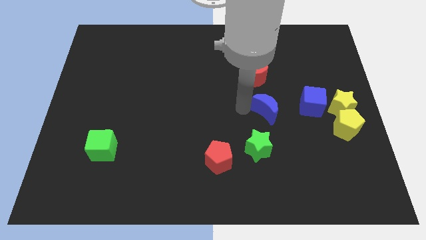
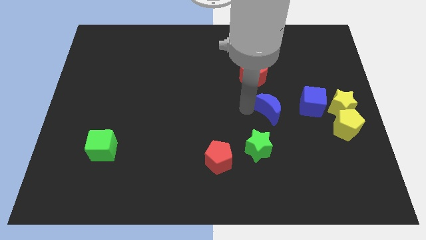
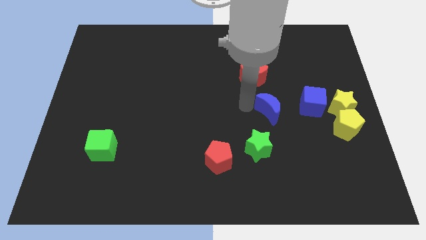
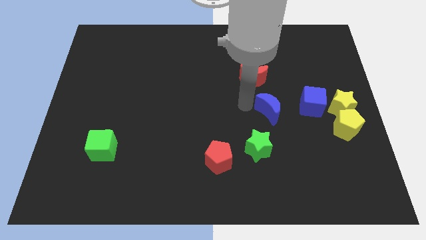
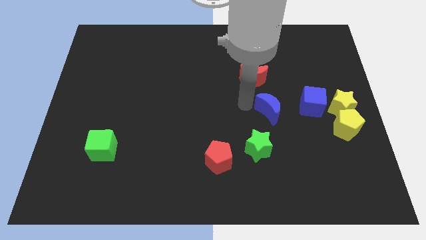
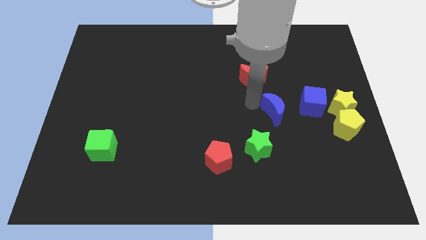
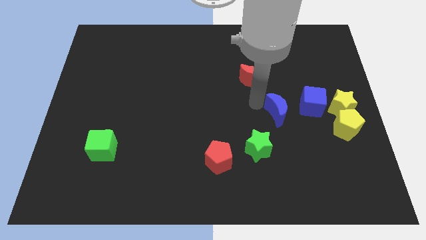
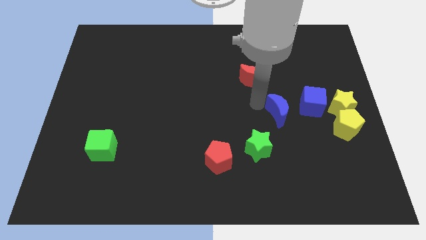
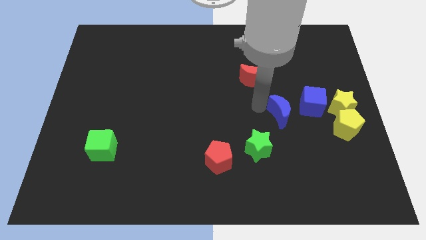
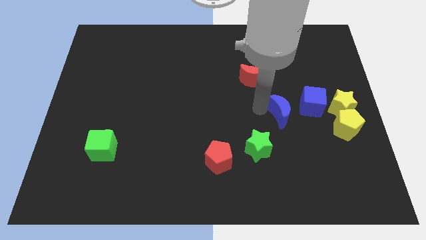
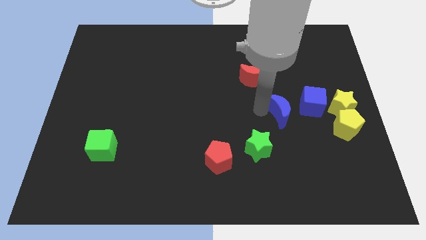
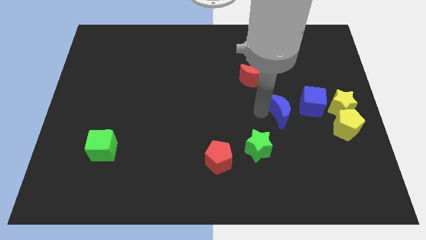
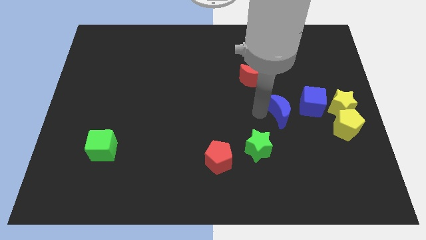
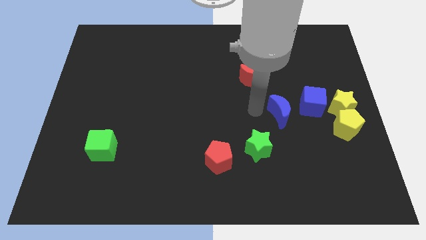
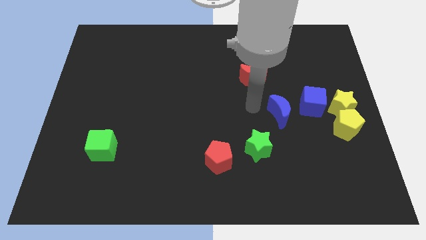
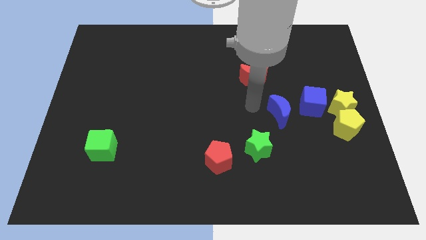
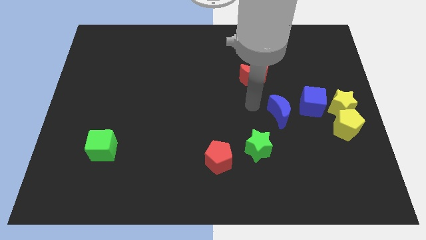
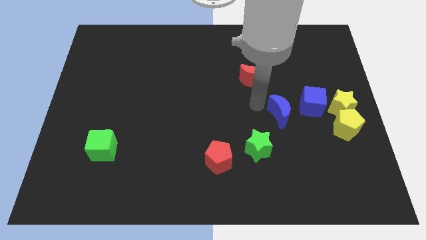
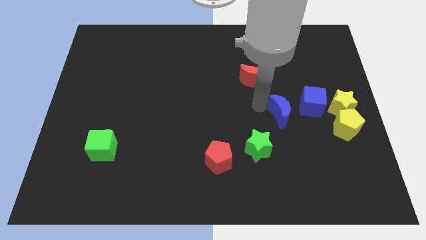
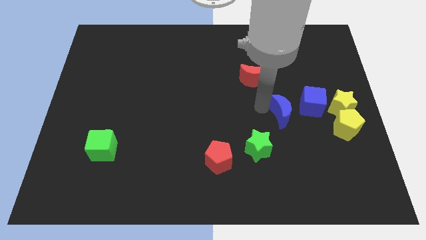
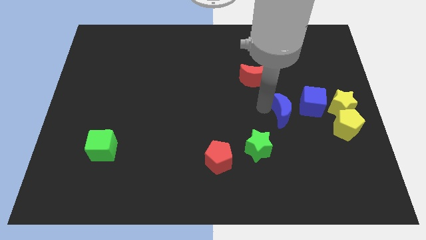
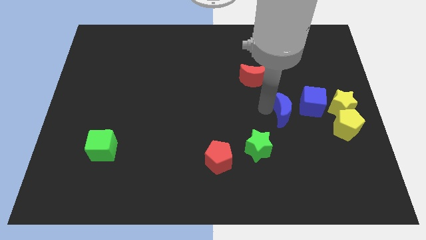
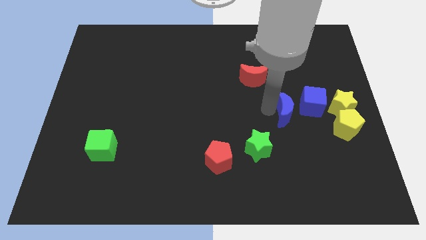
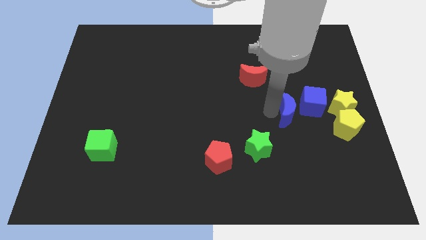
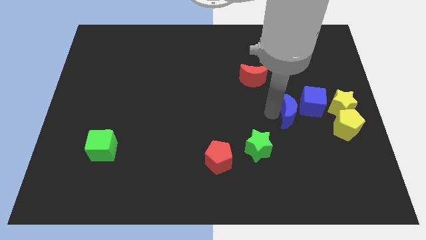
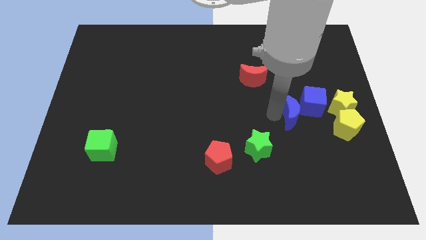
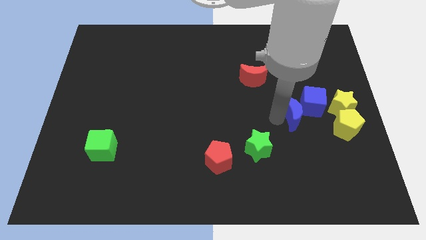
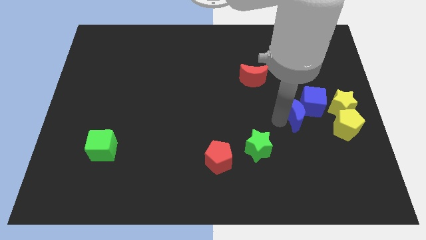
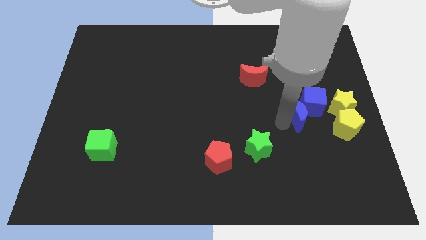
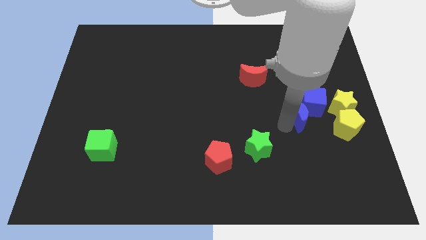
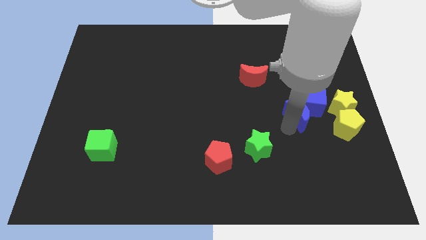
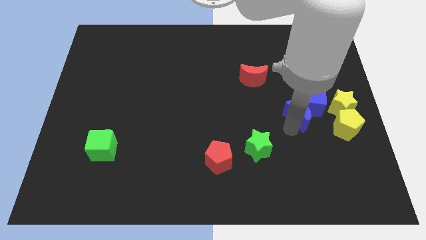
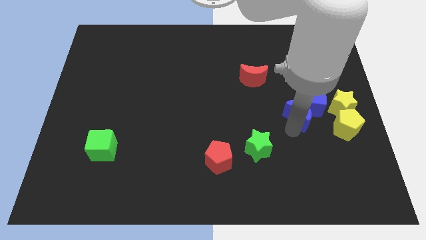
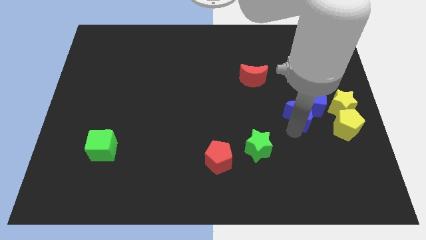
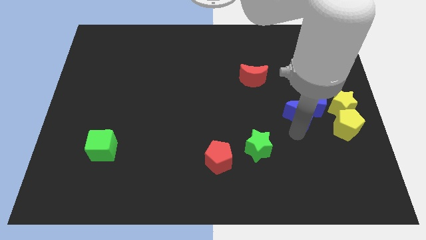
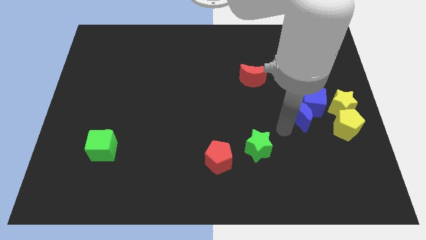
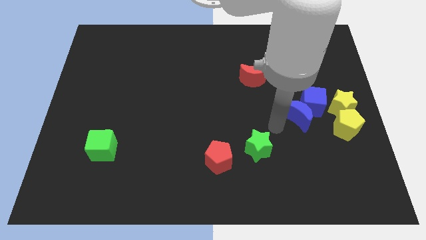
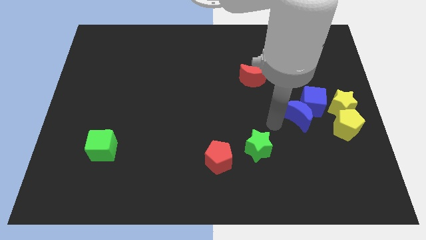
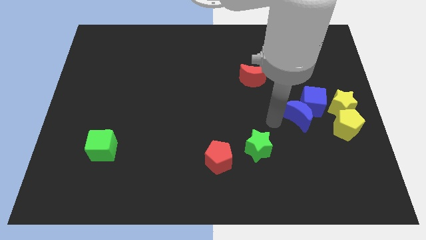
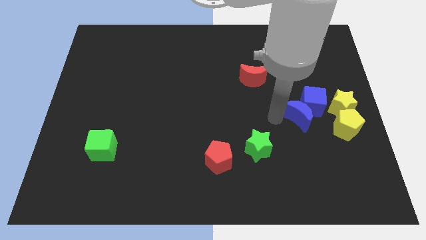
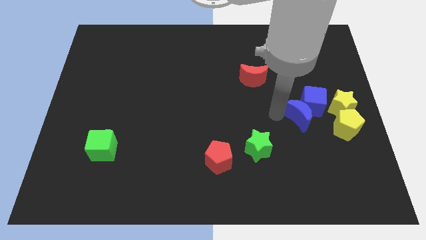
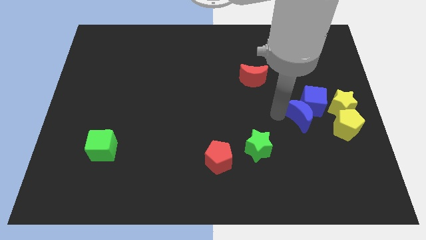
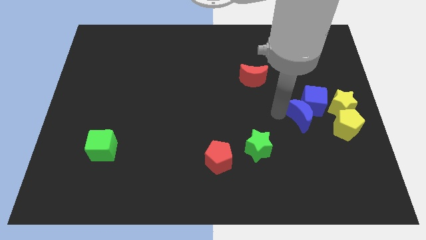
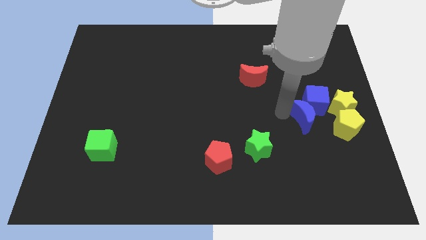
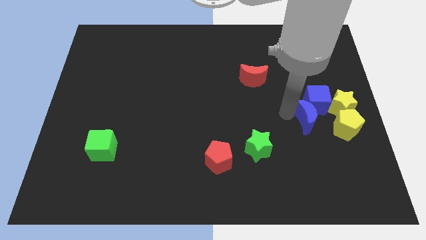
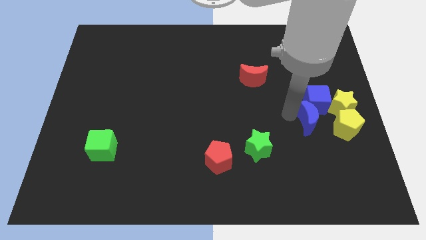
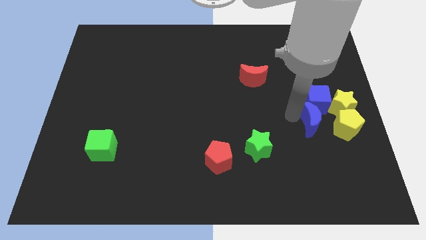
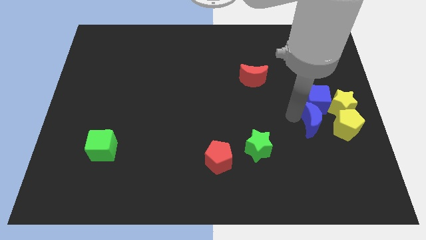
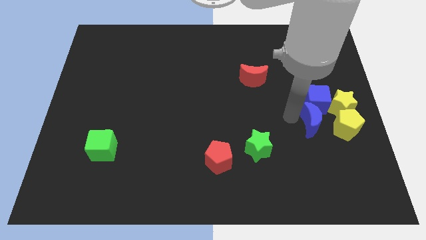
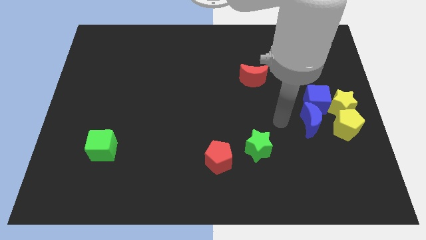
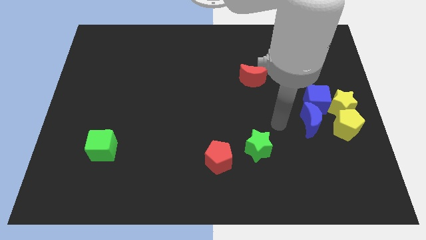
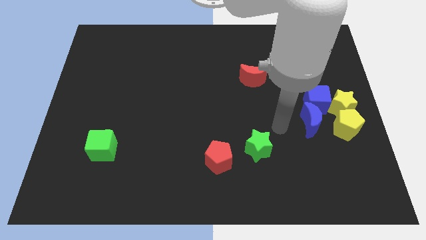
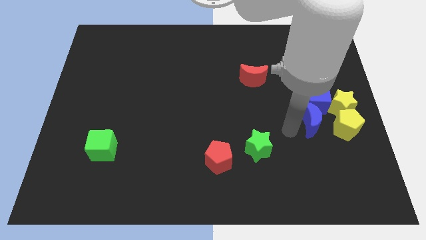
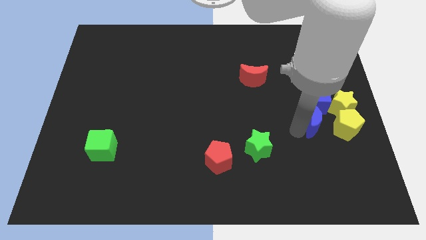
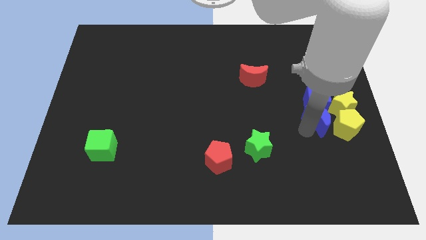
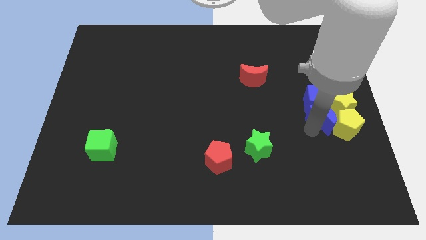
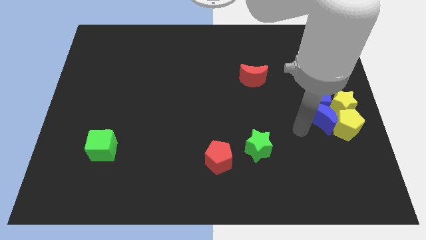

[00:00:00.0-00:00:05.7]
push the blue moon to the bottom of the blue cube

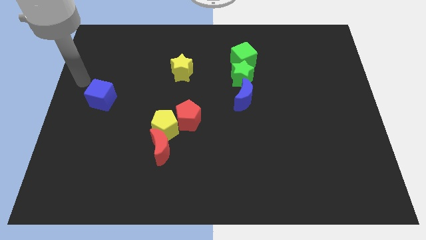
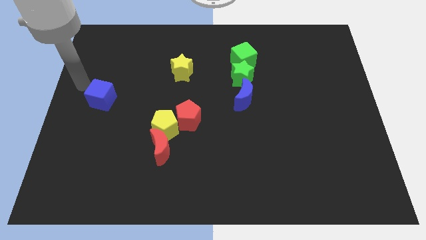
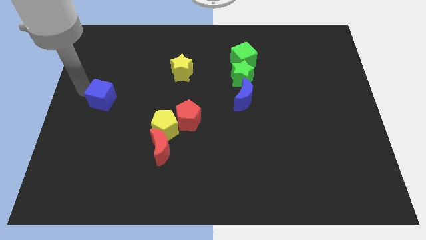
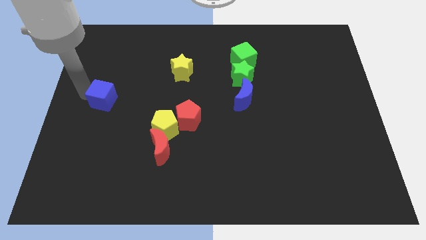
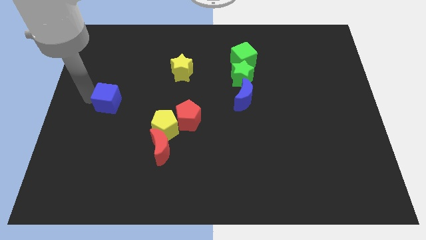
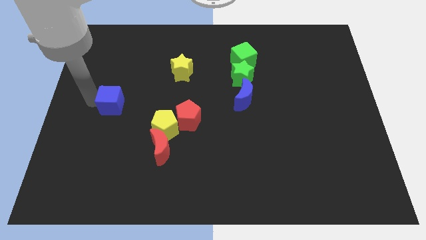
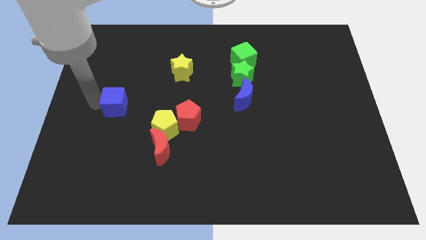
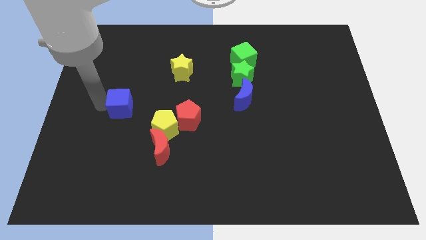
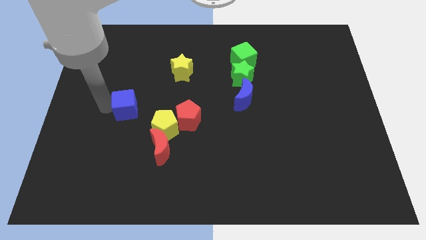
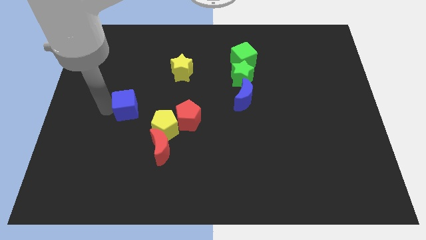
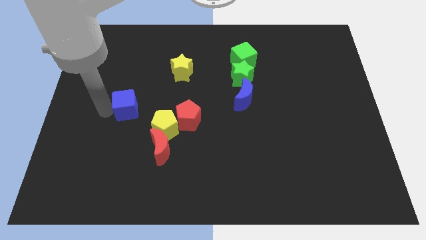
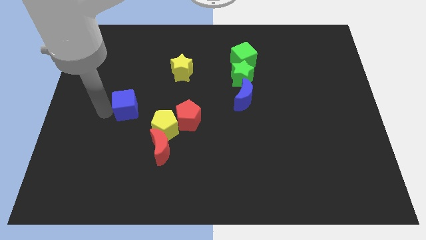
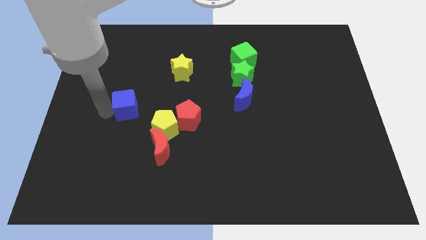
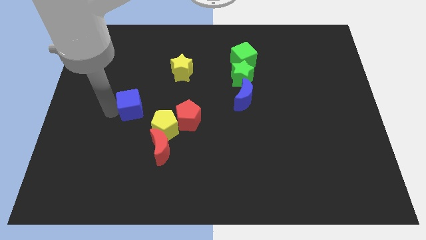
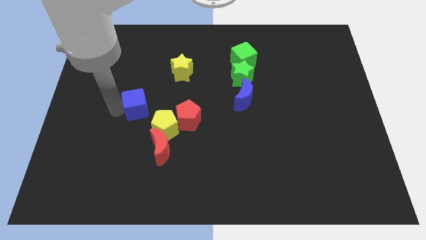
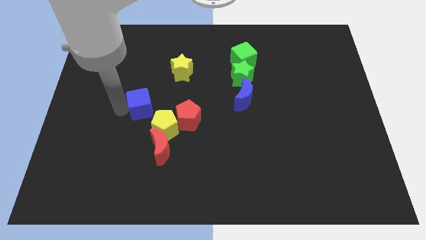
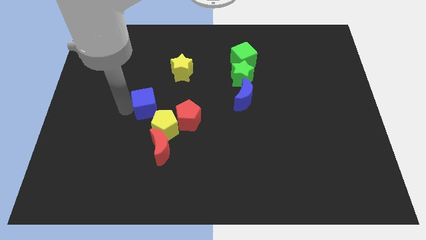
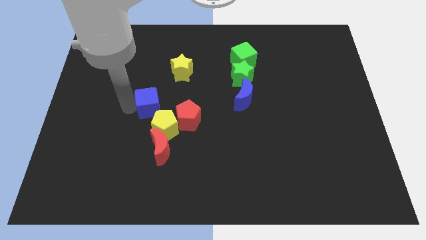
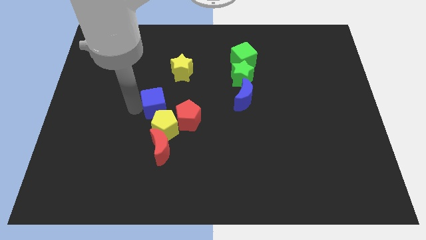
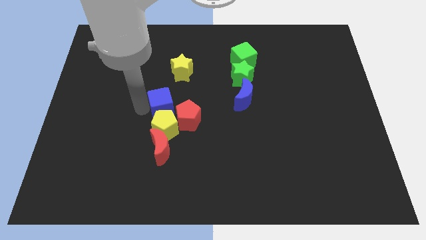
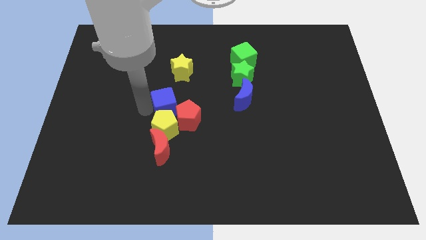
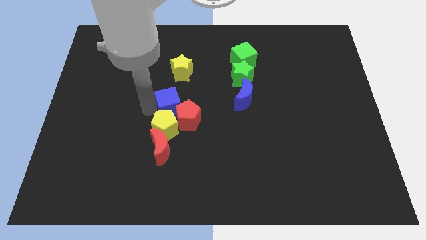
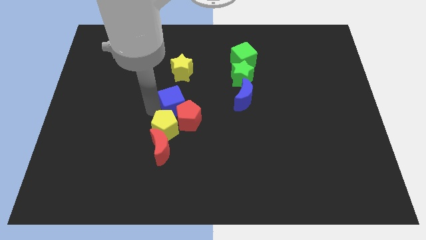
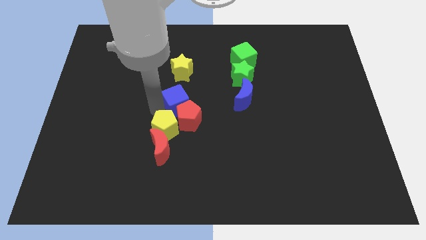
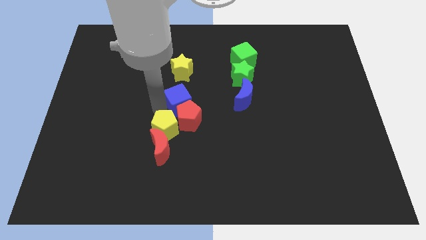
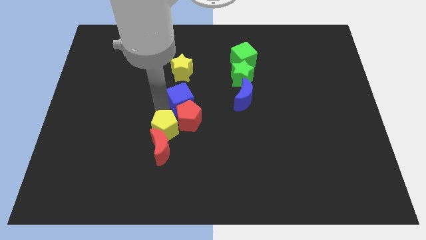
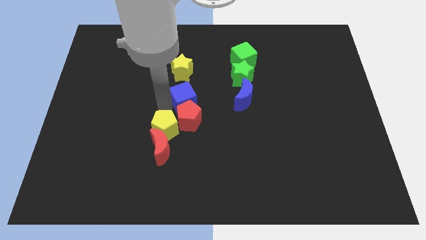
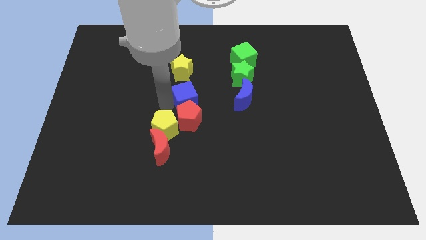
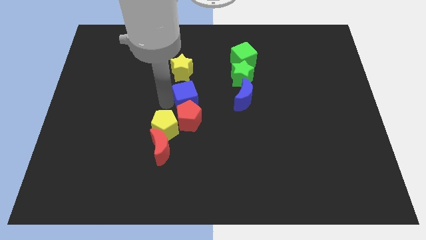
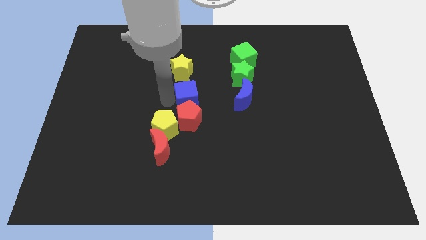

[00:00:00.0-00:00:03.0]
put the blue cube in between the yellow star and the red pentagon

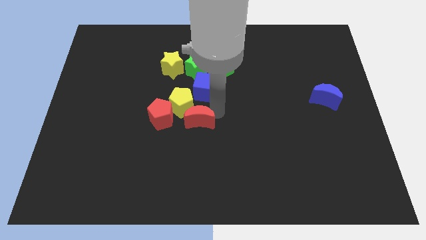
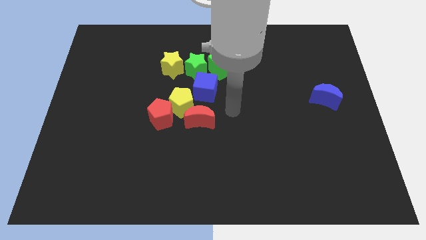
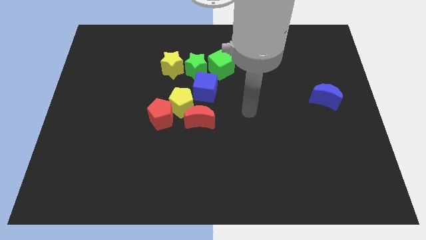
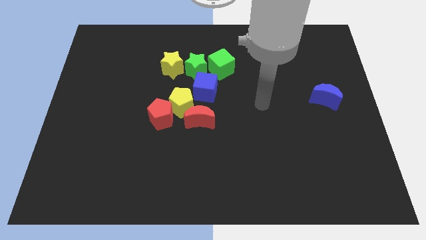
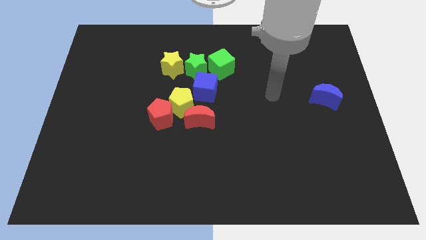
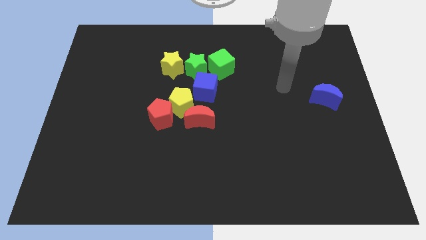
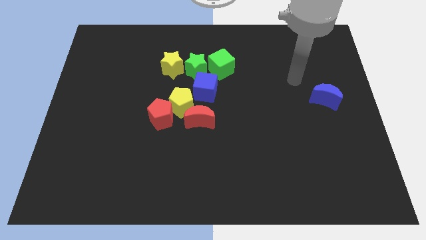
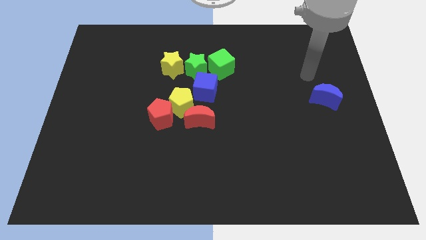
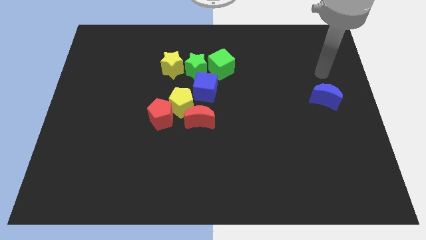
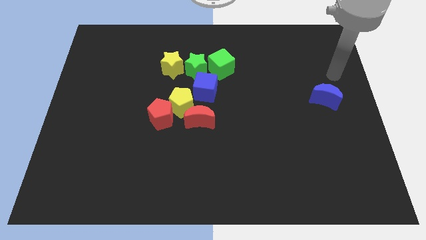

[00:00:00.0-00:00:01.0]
move the arm away from the red moon
